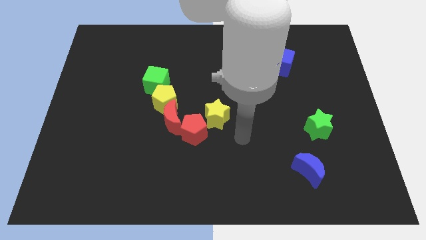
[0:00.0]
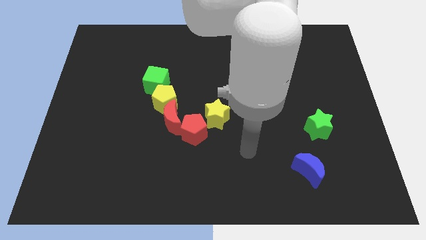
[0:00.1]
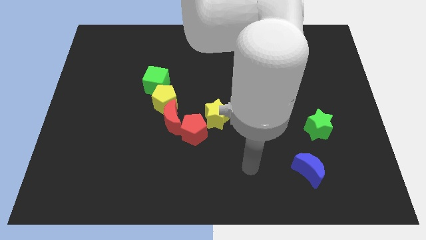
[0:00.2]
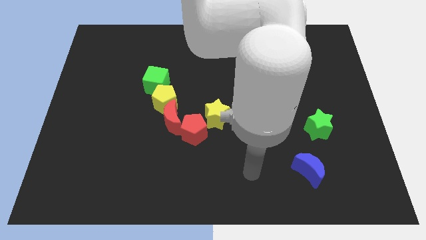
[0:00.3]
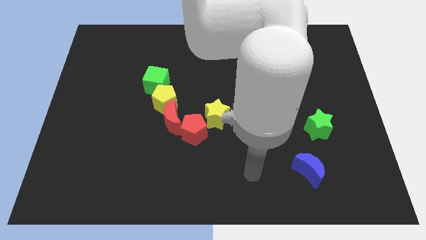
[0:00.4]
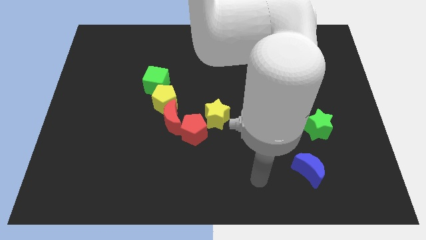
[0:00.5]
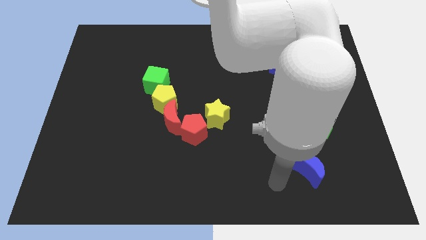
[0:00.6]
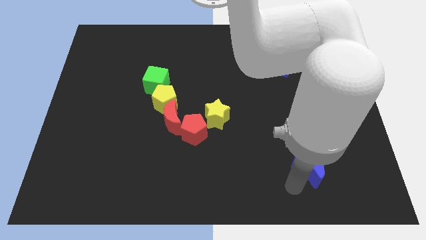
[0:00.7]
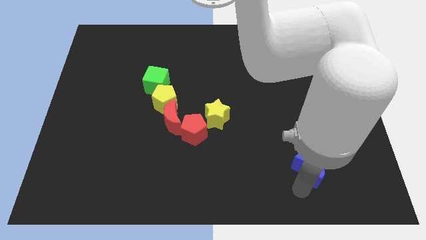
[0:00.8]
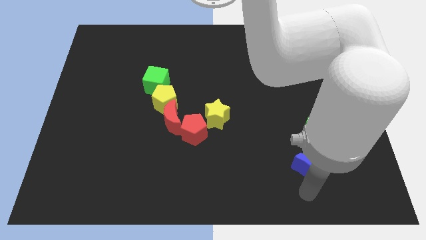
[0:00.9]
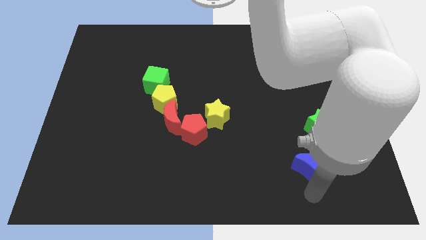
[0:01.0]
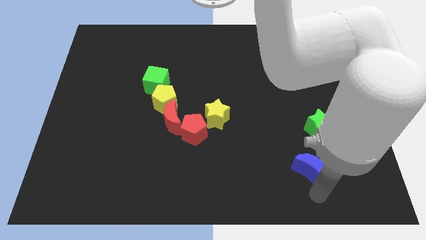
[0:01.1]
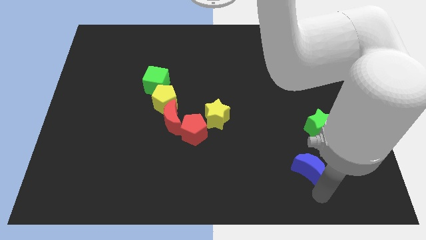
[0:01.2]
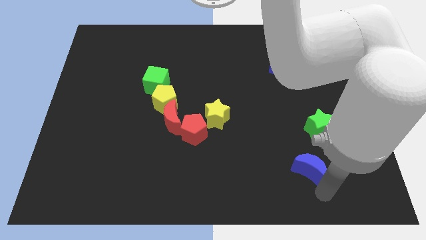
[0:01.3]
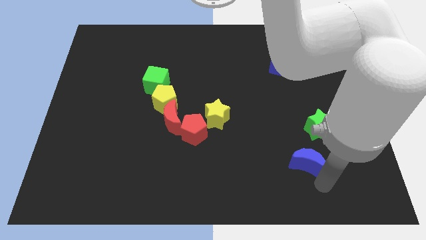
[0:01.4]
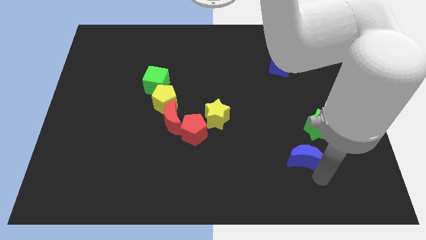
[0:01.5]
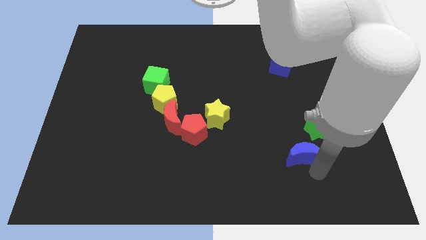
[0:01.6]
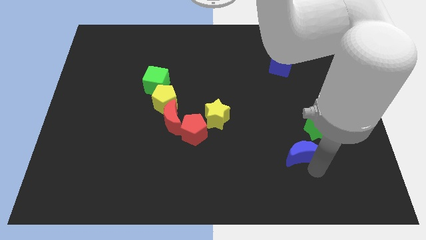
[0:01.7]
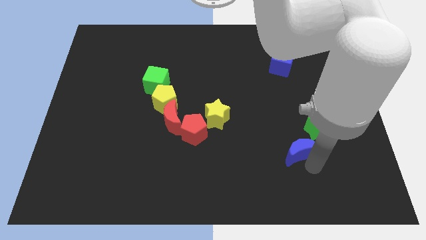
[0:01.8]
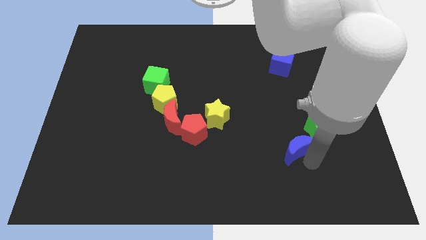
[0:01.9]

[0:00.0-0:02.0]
slightly move the blue crescent up

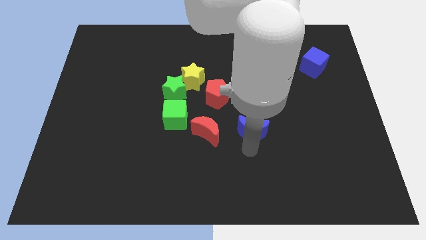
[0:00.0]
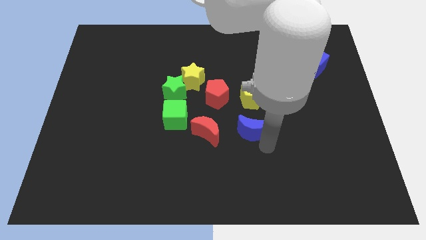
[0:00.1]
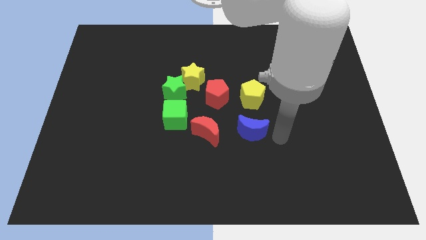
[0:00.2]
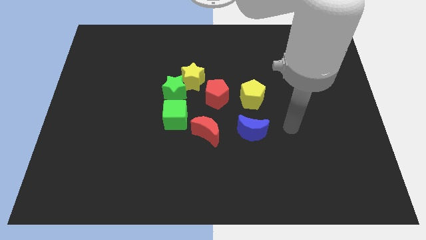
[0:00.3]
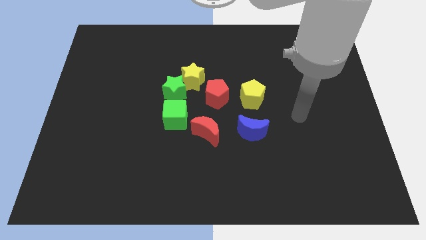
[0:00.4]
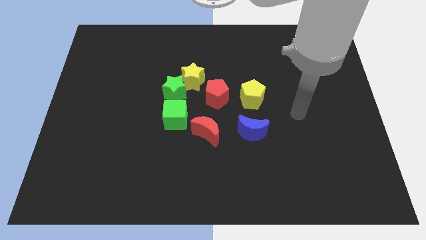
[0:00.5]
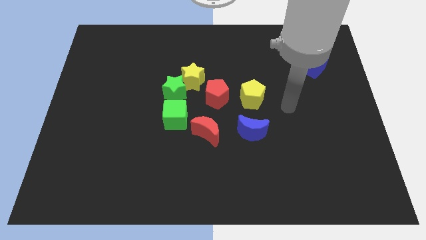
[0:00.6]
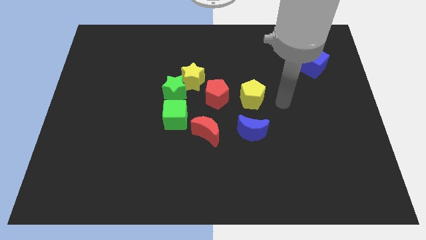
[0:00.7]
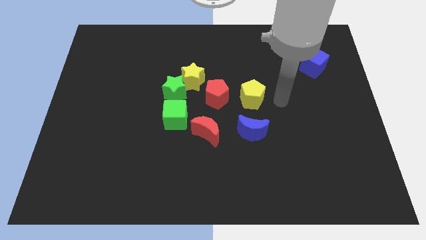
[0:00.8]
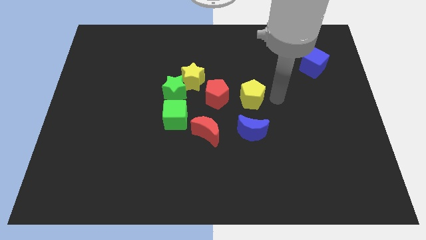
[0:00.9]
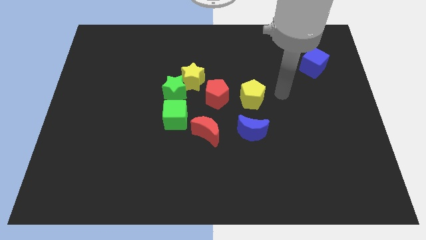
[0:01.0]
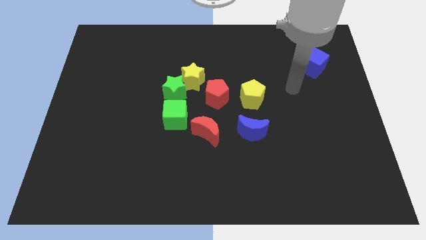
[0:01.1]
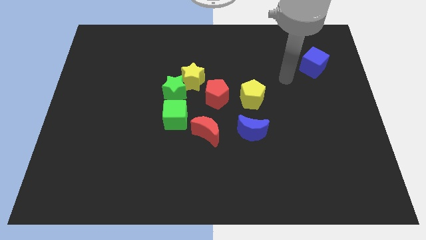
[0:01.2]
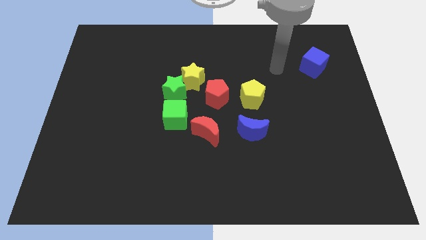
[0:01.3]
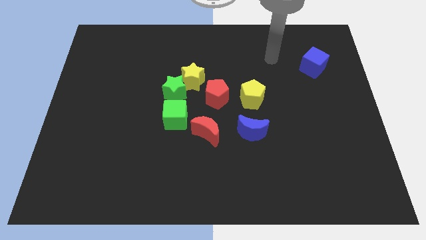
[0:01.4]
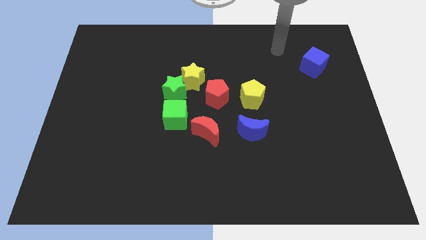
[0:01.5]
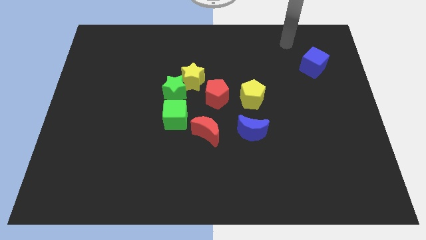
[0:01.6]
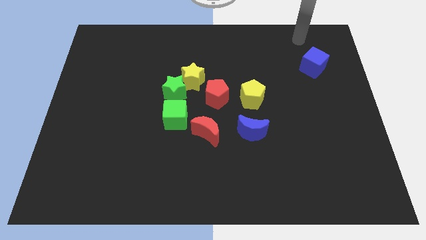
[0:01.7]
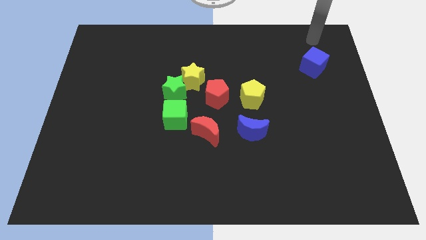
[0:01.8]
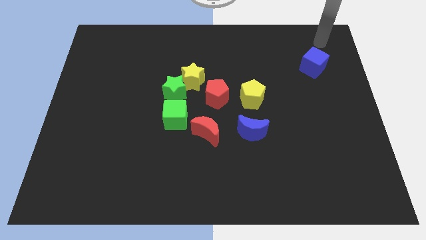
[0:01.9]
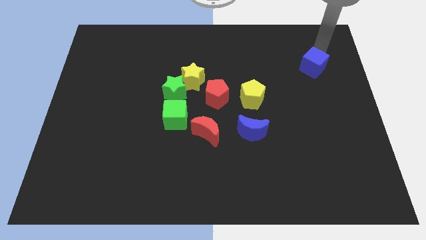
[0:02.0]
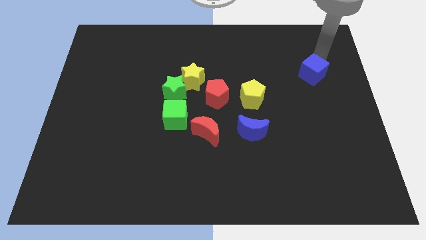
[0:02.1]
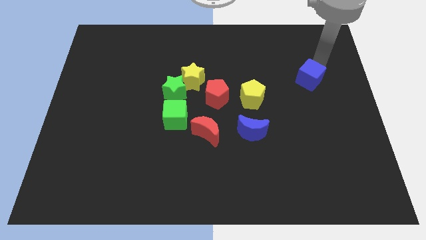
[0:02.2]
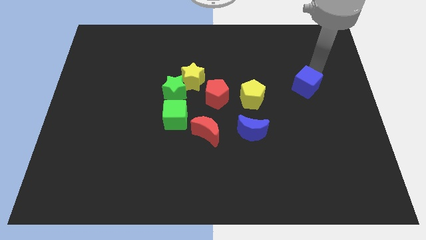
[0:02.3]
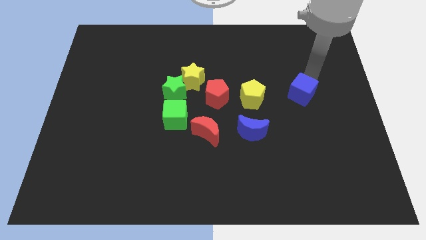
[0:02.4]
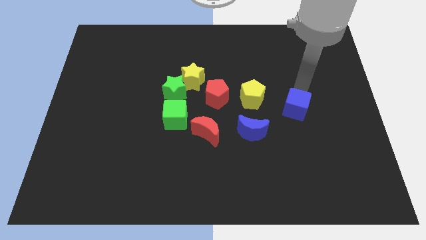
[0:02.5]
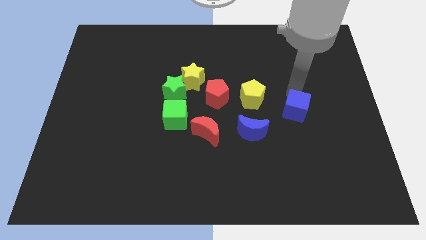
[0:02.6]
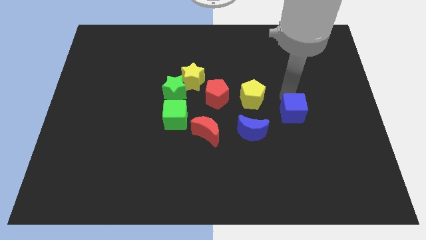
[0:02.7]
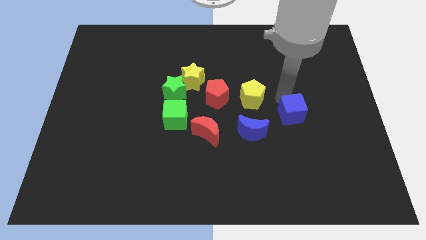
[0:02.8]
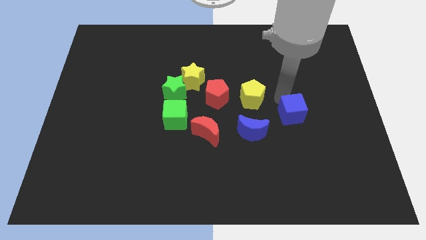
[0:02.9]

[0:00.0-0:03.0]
push the blue cube downward

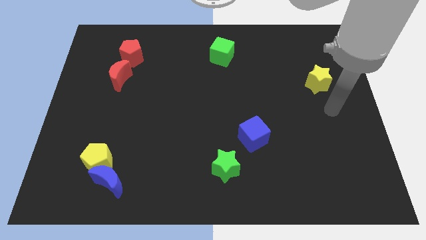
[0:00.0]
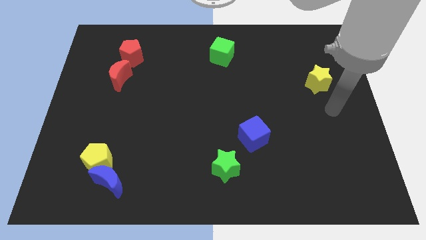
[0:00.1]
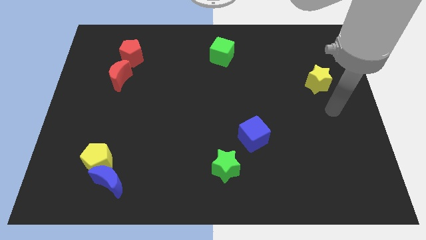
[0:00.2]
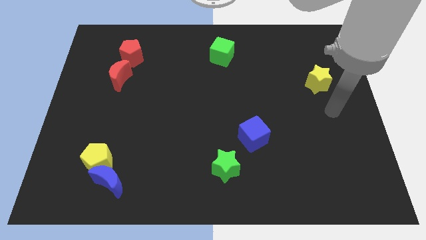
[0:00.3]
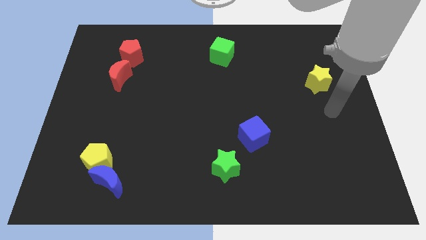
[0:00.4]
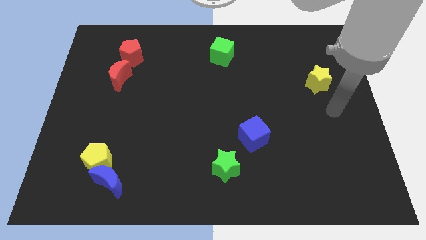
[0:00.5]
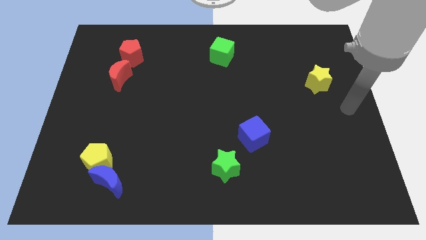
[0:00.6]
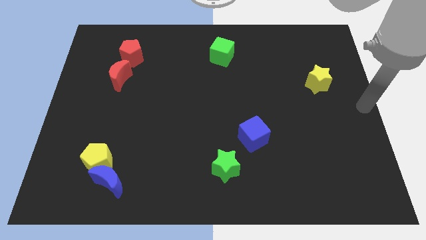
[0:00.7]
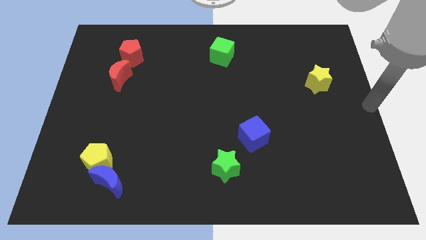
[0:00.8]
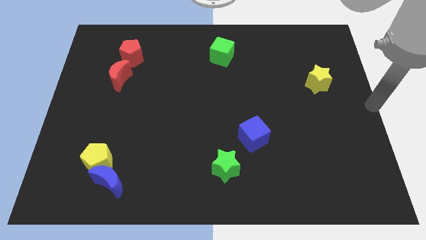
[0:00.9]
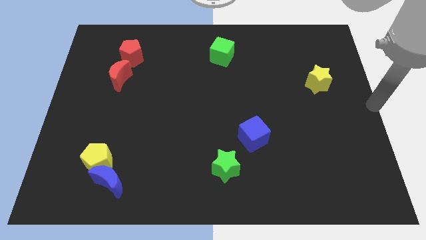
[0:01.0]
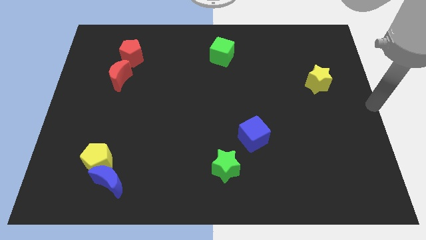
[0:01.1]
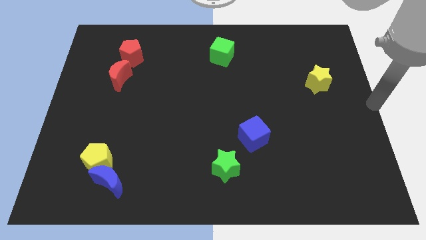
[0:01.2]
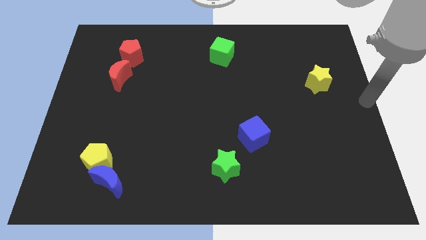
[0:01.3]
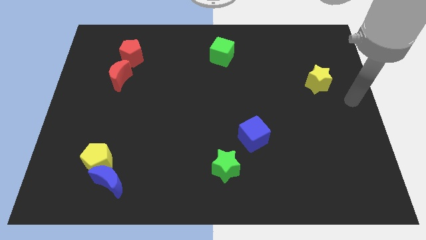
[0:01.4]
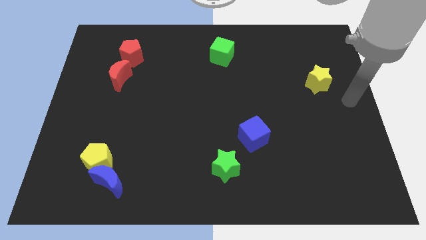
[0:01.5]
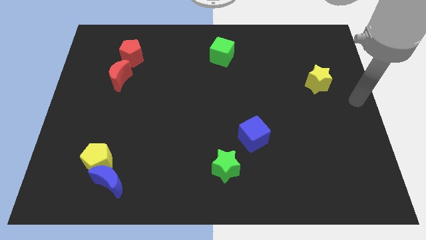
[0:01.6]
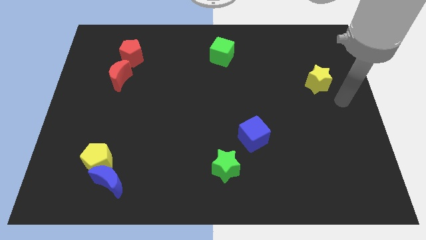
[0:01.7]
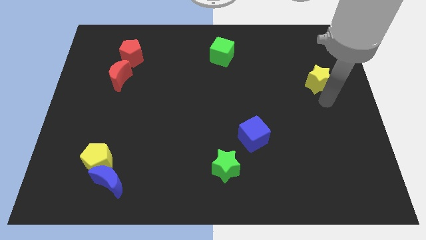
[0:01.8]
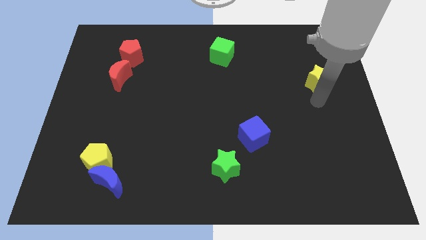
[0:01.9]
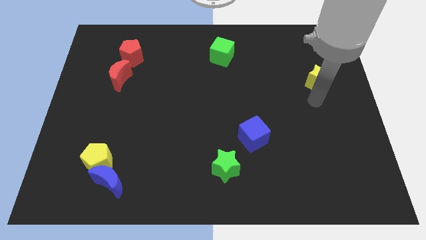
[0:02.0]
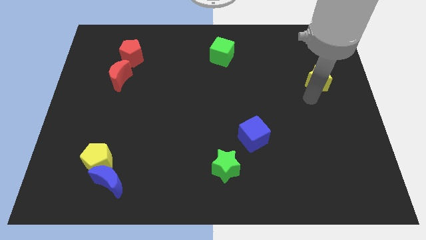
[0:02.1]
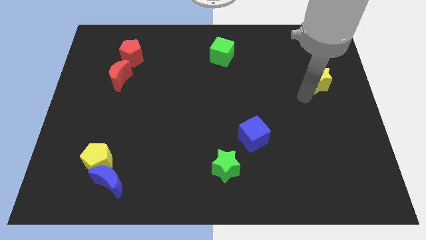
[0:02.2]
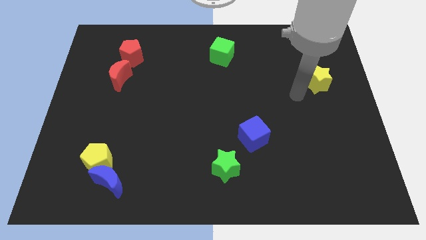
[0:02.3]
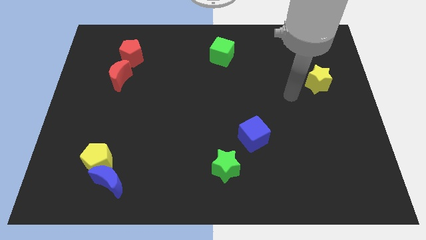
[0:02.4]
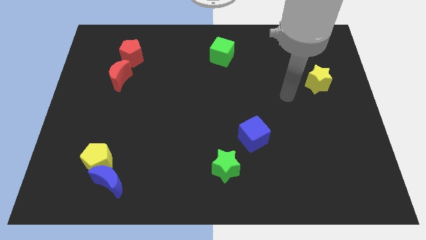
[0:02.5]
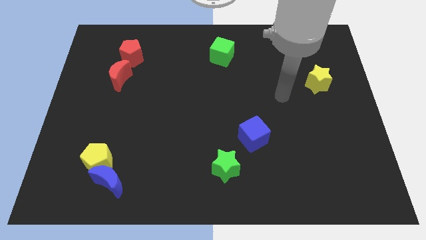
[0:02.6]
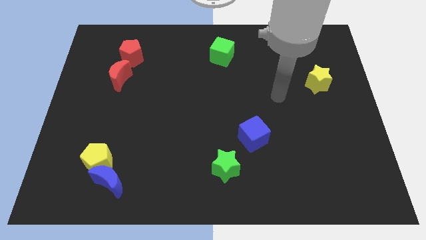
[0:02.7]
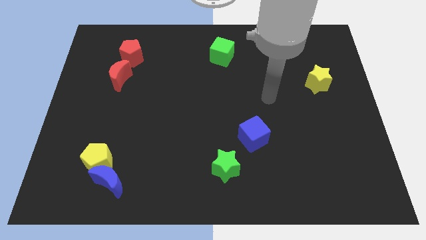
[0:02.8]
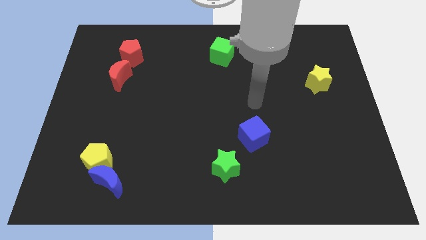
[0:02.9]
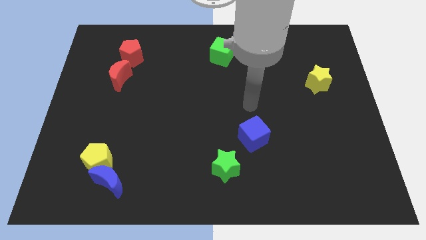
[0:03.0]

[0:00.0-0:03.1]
place the hand on the top of the blue cube

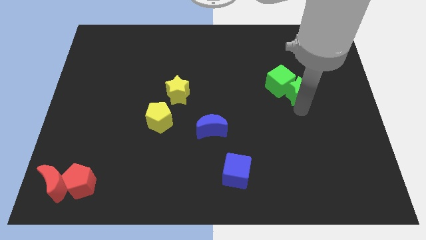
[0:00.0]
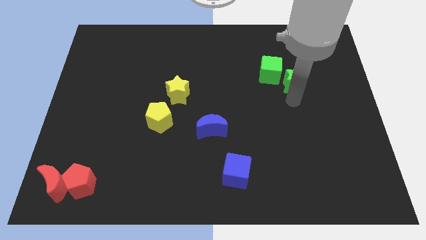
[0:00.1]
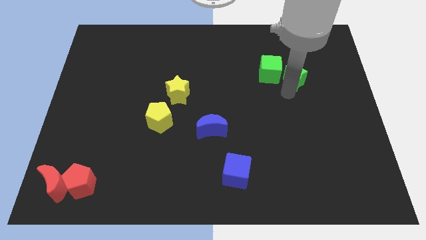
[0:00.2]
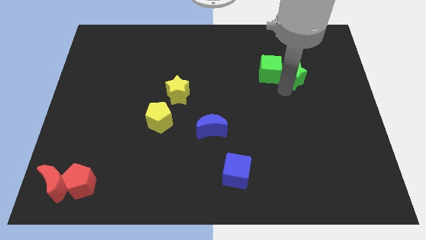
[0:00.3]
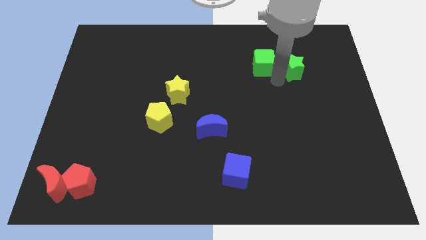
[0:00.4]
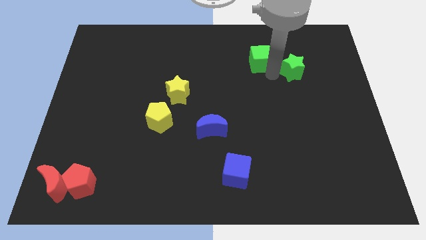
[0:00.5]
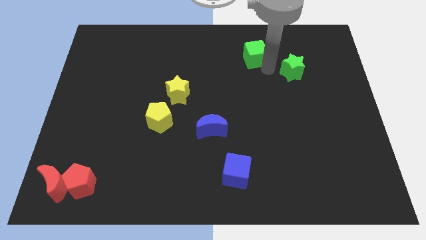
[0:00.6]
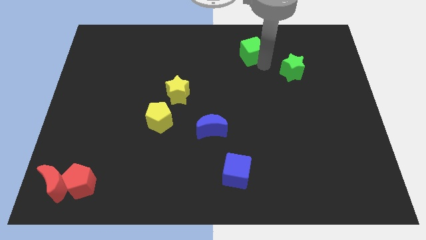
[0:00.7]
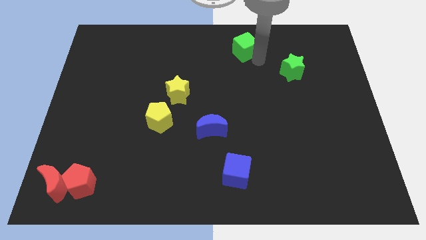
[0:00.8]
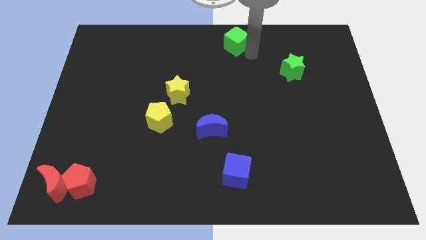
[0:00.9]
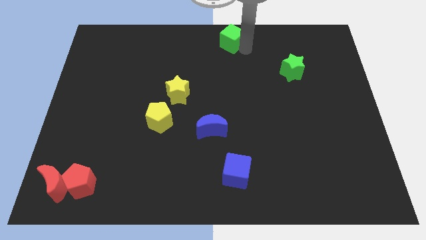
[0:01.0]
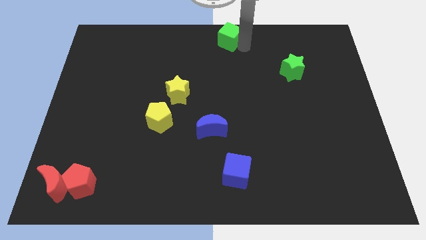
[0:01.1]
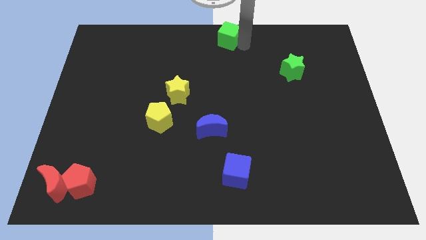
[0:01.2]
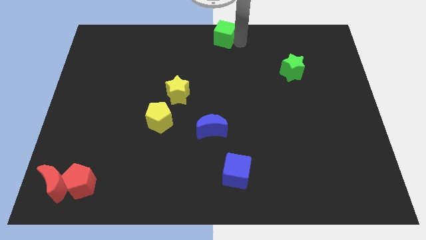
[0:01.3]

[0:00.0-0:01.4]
separate the green cube from green star
